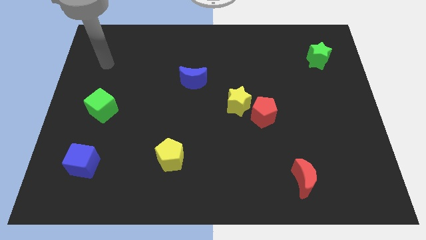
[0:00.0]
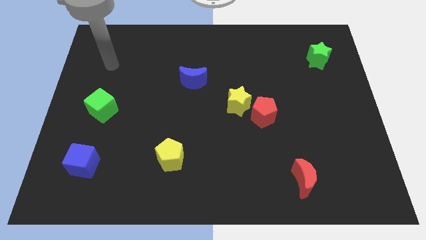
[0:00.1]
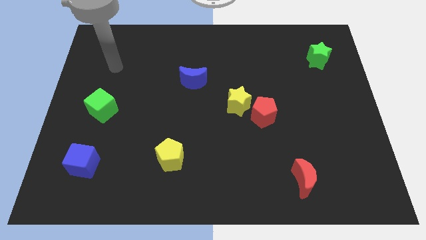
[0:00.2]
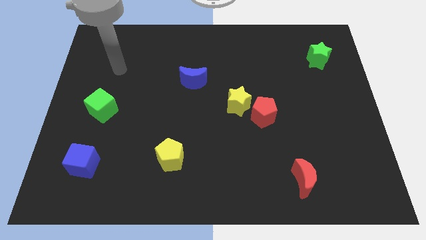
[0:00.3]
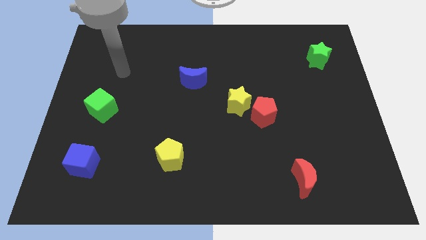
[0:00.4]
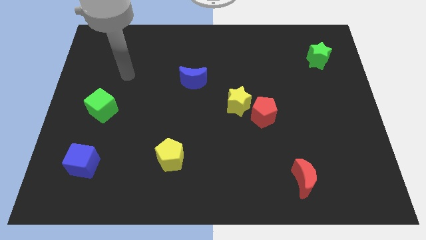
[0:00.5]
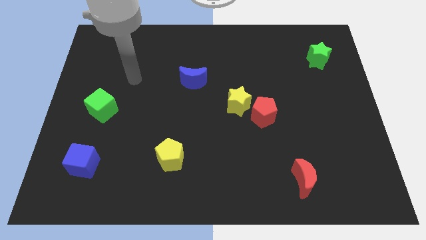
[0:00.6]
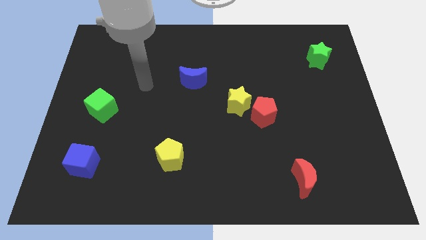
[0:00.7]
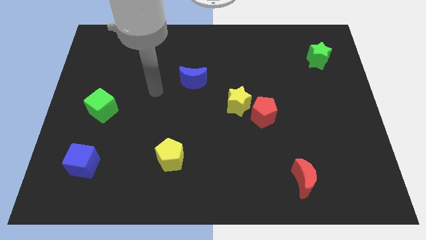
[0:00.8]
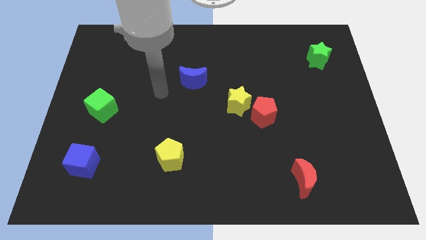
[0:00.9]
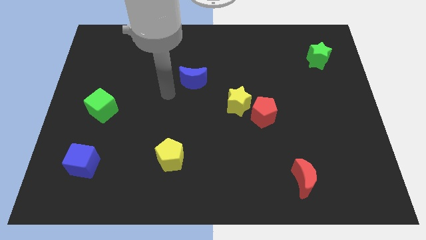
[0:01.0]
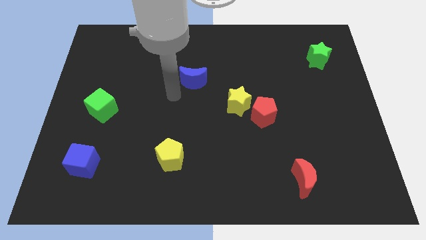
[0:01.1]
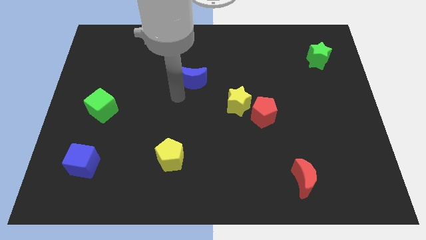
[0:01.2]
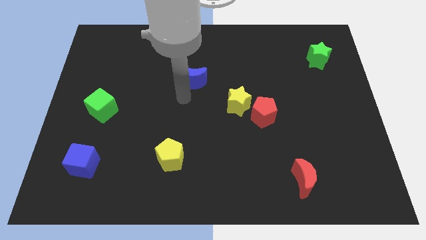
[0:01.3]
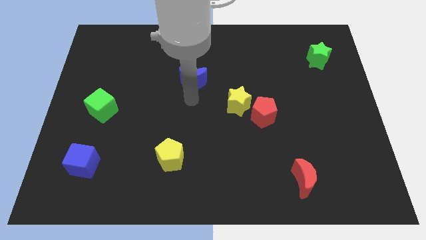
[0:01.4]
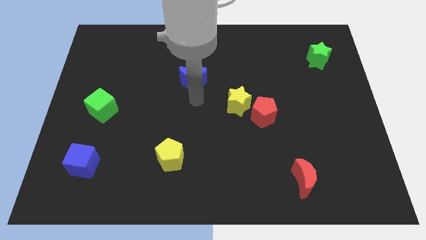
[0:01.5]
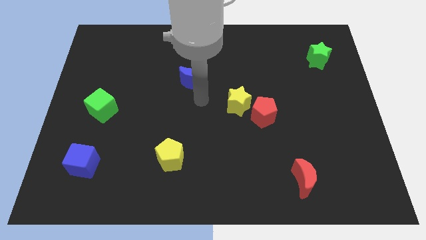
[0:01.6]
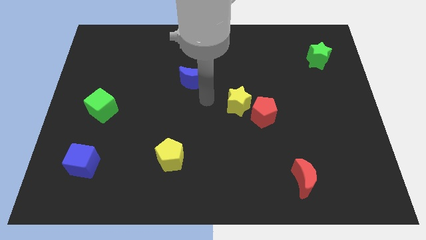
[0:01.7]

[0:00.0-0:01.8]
point your arm below blue moon

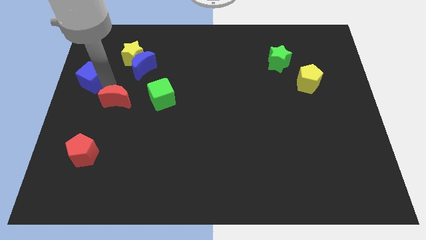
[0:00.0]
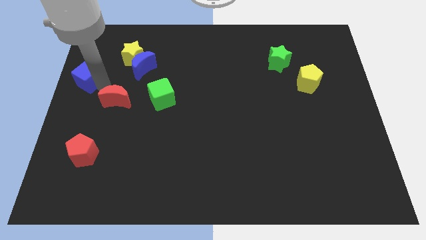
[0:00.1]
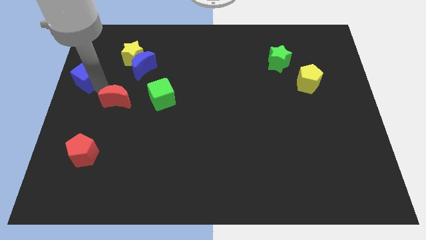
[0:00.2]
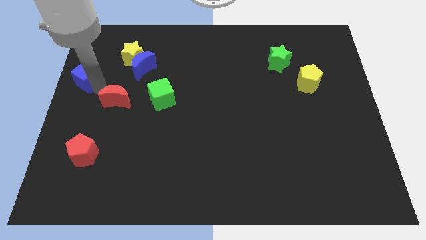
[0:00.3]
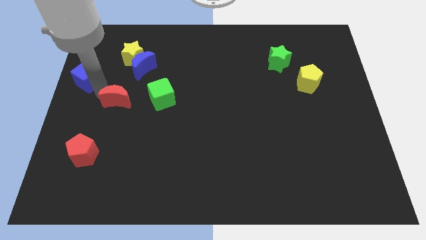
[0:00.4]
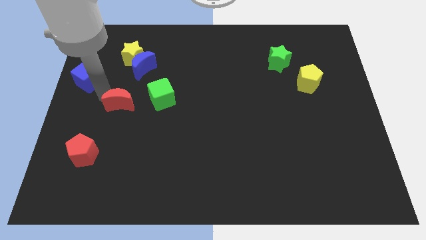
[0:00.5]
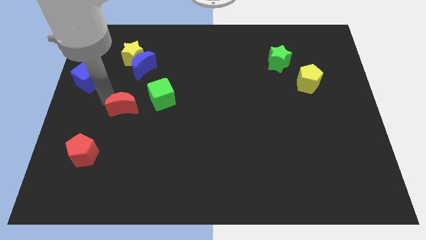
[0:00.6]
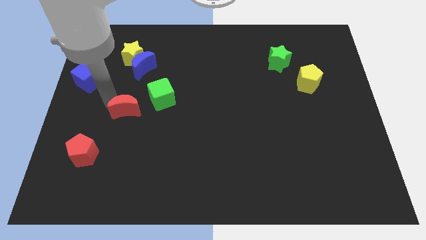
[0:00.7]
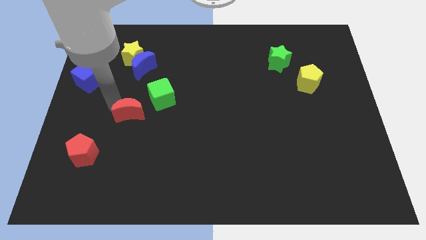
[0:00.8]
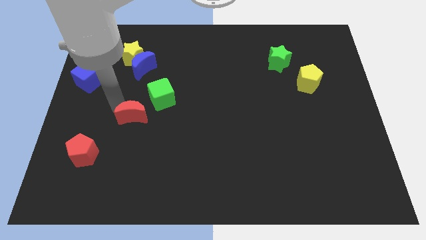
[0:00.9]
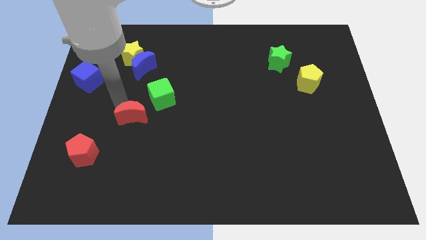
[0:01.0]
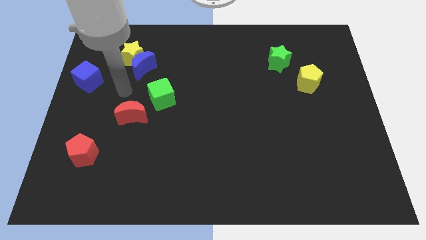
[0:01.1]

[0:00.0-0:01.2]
push red crescent slightly towards down

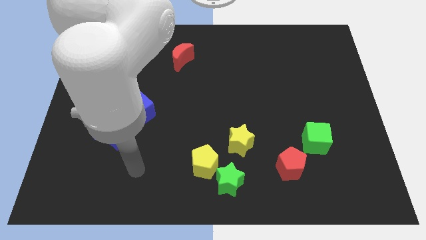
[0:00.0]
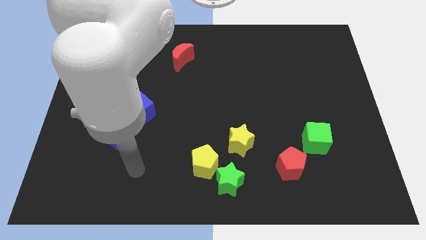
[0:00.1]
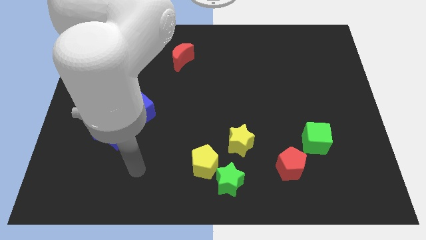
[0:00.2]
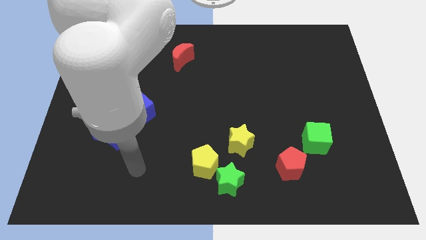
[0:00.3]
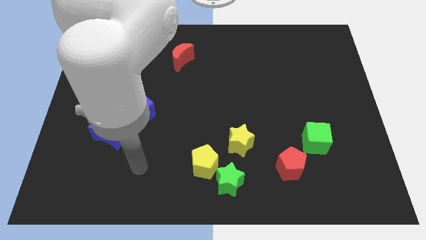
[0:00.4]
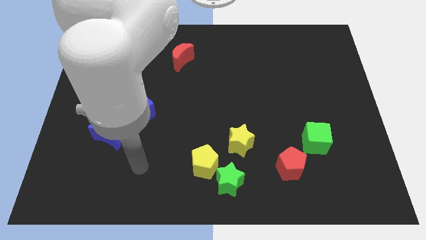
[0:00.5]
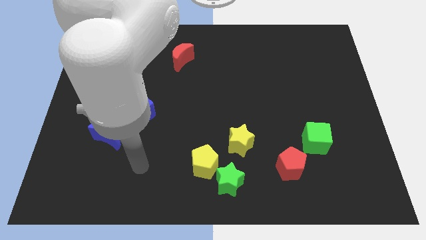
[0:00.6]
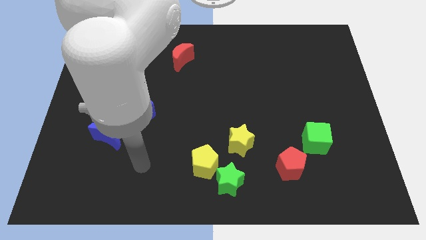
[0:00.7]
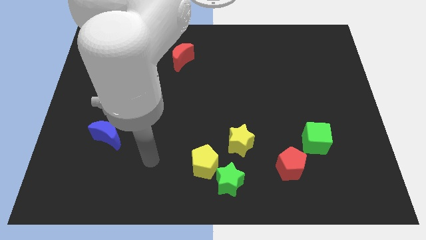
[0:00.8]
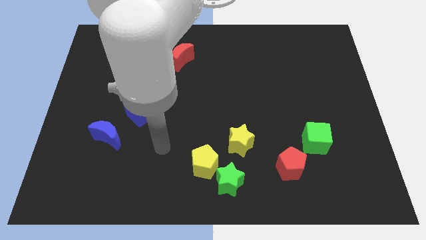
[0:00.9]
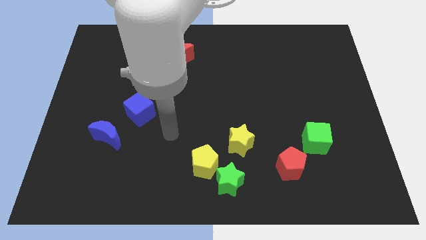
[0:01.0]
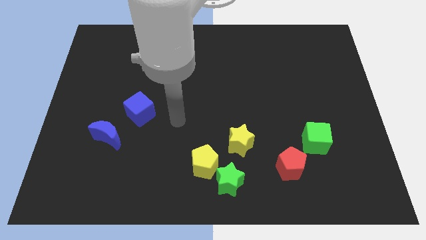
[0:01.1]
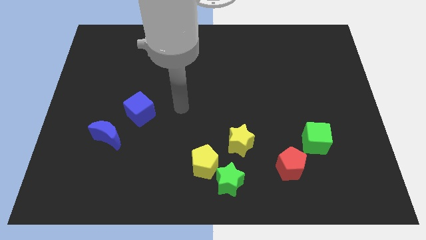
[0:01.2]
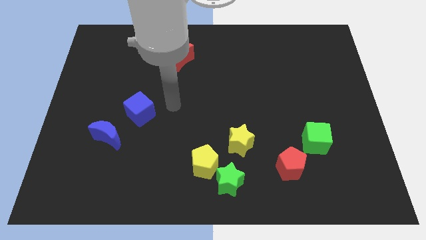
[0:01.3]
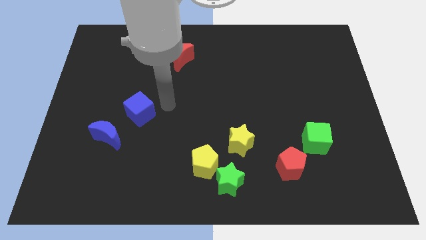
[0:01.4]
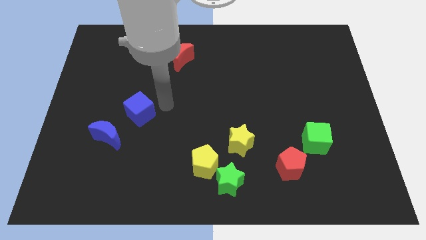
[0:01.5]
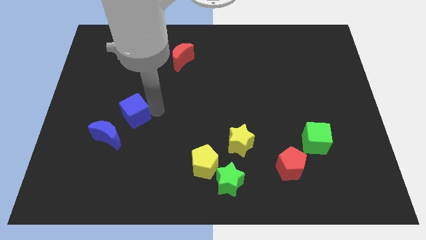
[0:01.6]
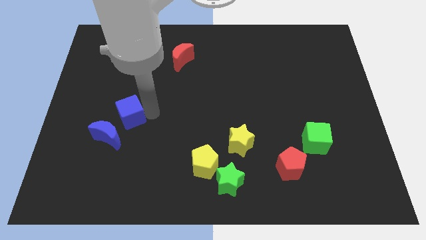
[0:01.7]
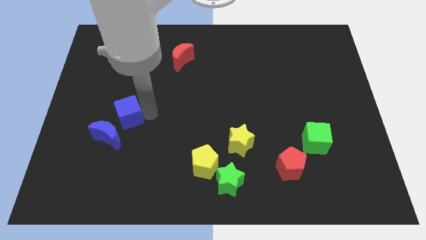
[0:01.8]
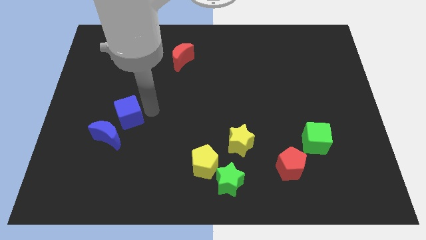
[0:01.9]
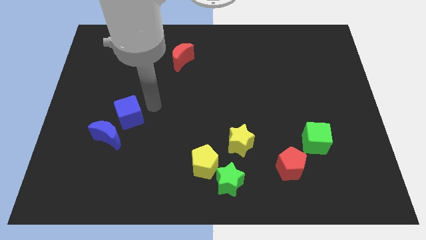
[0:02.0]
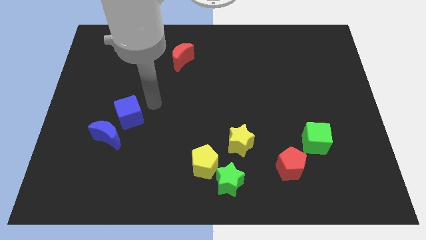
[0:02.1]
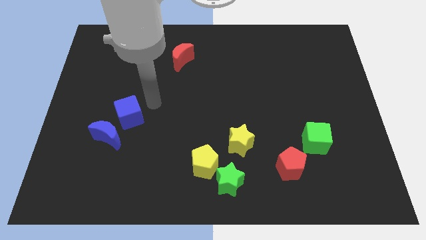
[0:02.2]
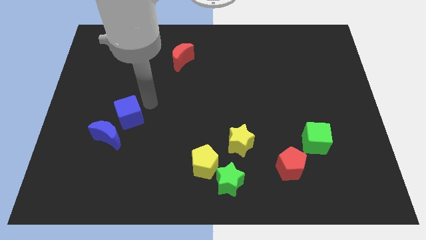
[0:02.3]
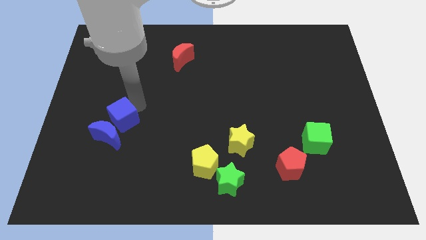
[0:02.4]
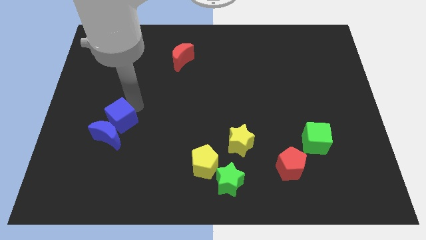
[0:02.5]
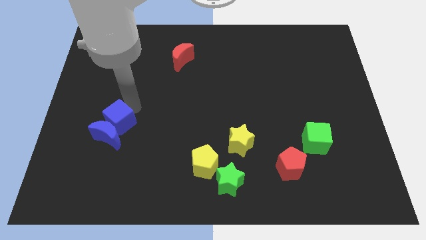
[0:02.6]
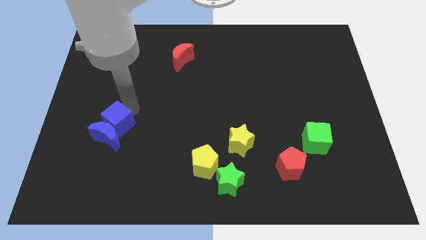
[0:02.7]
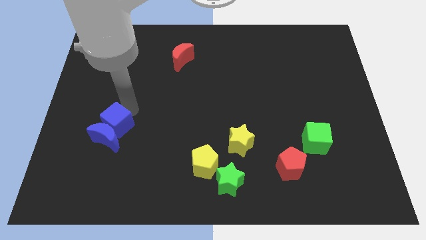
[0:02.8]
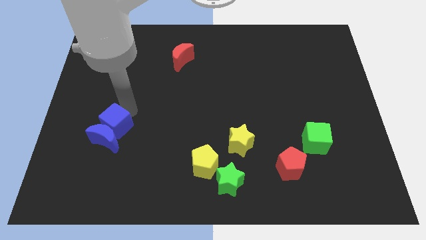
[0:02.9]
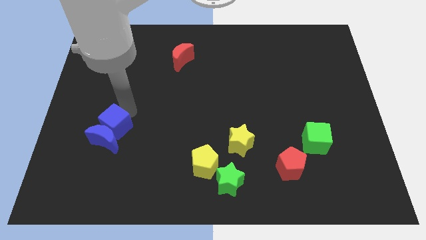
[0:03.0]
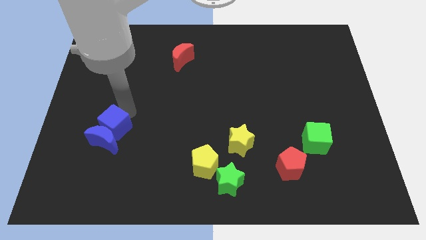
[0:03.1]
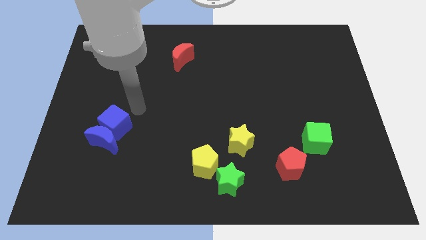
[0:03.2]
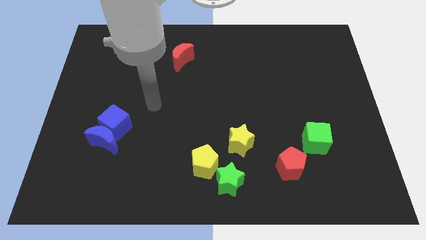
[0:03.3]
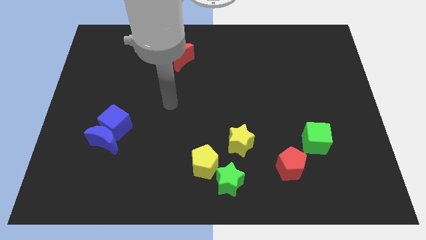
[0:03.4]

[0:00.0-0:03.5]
push the blue cube into the blue crescent

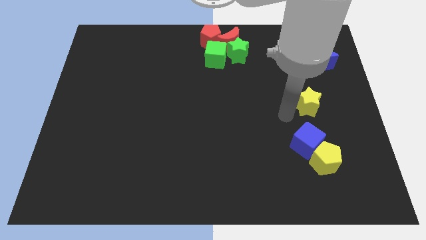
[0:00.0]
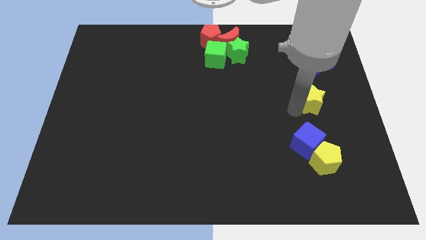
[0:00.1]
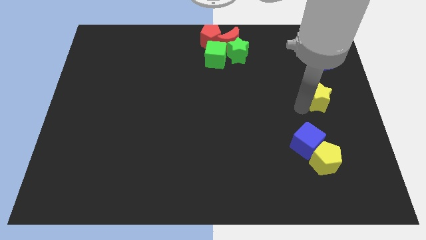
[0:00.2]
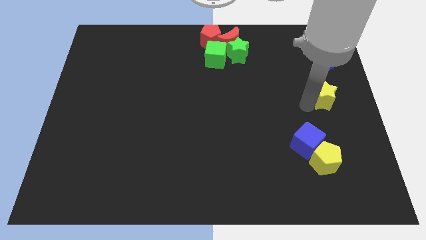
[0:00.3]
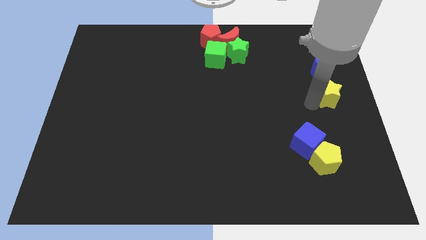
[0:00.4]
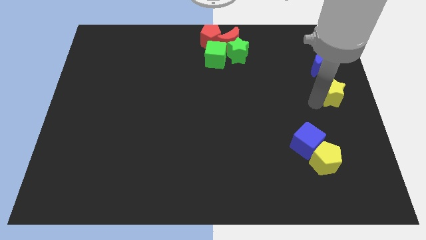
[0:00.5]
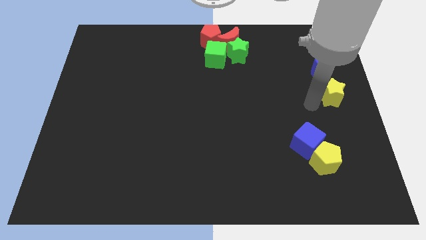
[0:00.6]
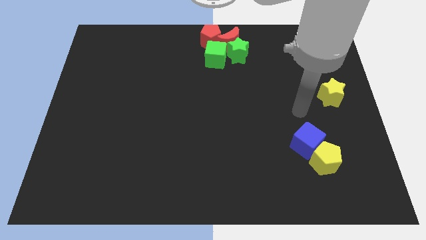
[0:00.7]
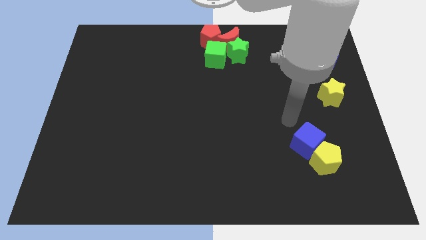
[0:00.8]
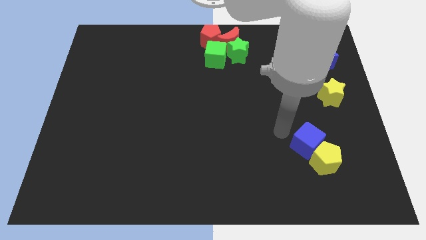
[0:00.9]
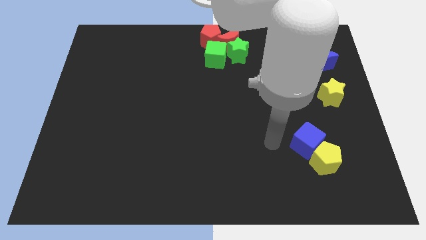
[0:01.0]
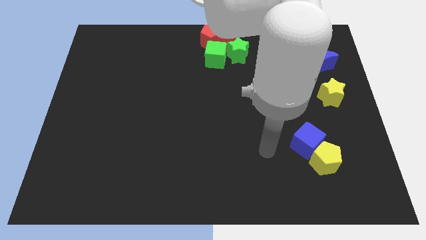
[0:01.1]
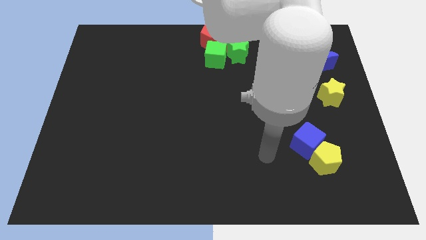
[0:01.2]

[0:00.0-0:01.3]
move the yellow star vertically below the blue crescent

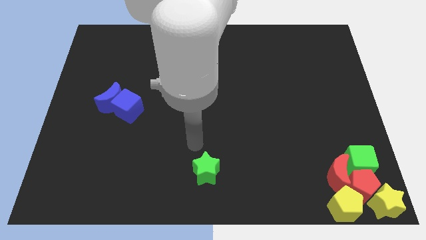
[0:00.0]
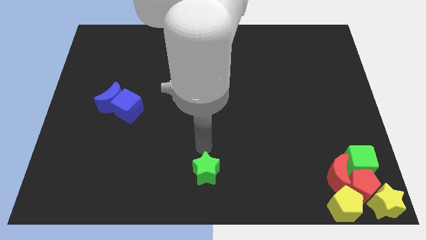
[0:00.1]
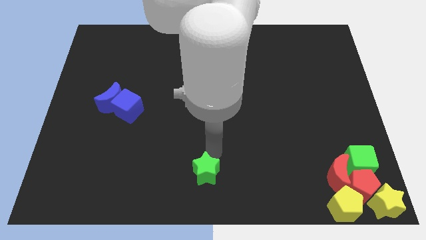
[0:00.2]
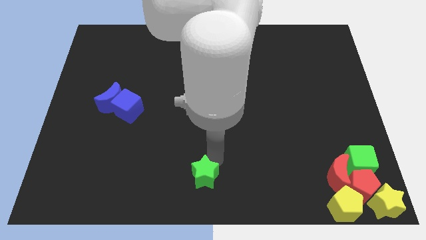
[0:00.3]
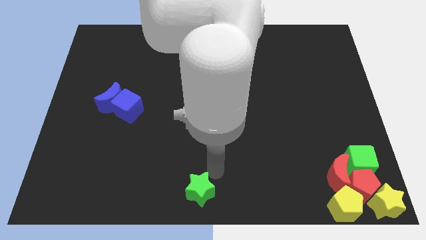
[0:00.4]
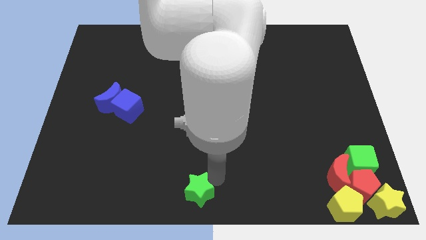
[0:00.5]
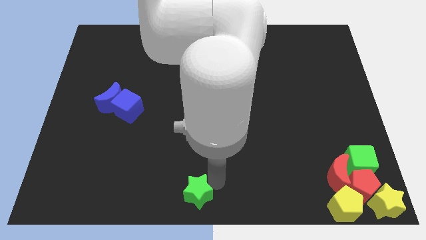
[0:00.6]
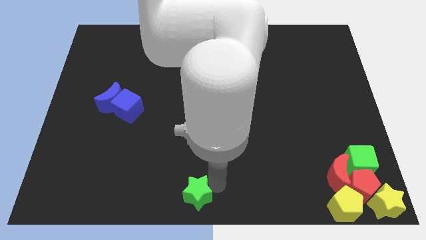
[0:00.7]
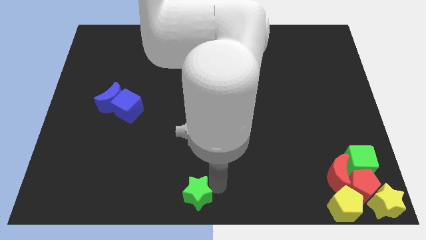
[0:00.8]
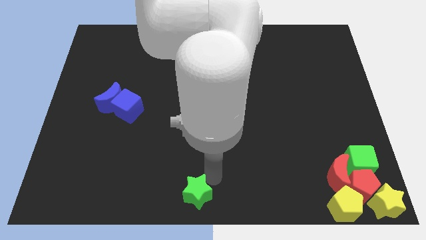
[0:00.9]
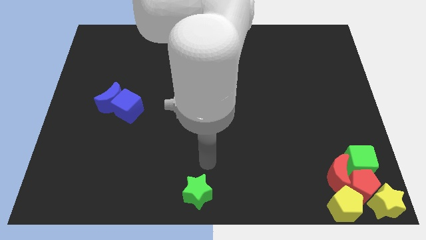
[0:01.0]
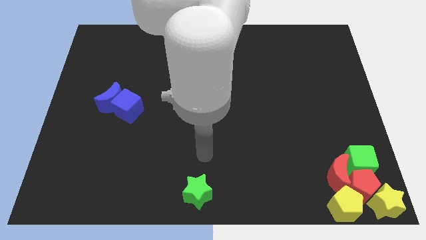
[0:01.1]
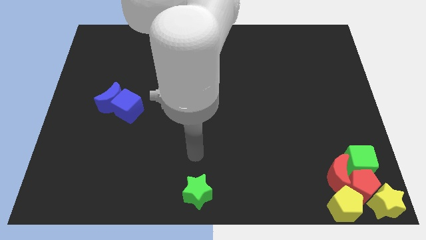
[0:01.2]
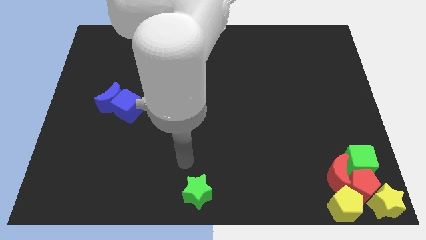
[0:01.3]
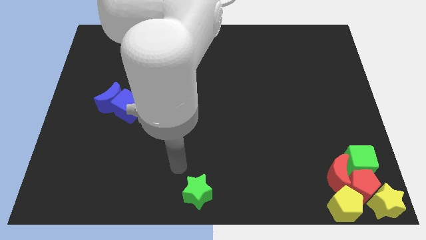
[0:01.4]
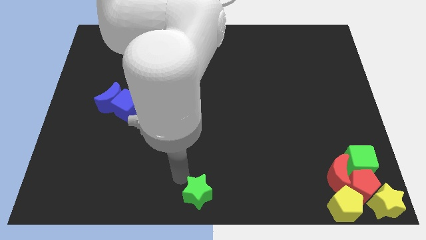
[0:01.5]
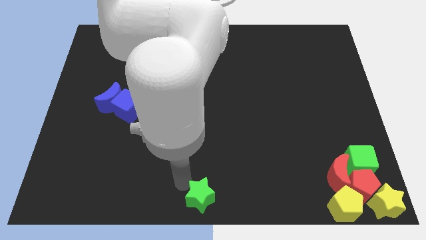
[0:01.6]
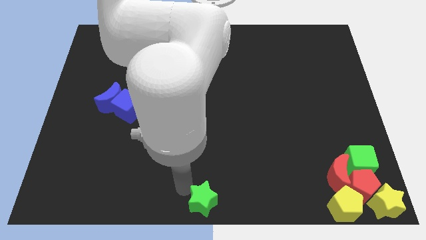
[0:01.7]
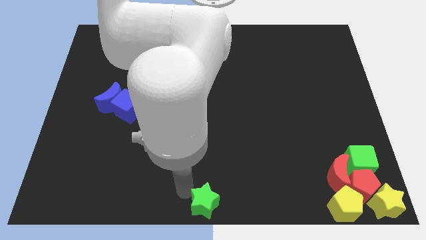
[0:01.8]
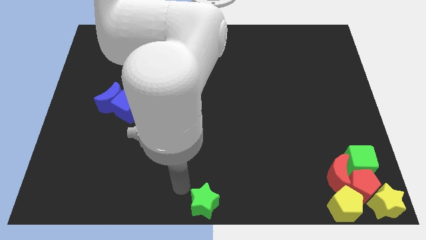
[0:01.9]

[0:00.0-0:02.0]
put the green star at the bottom center
